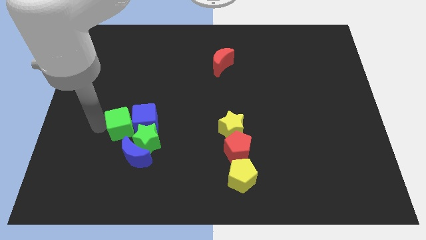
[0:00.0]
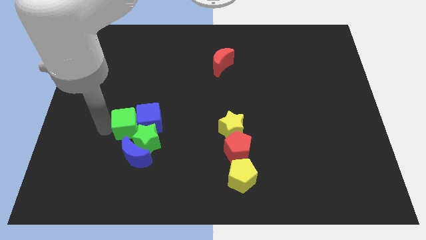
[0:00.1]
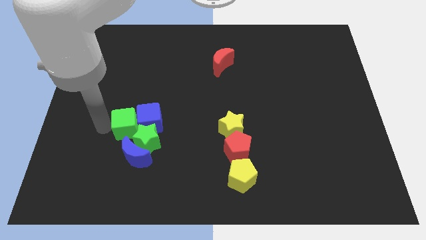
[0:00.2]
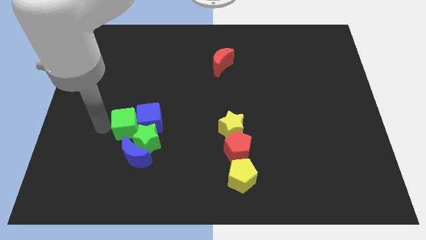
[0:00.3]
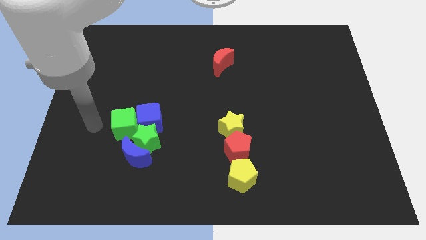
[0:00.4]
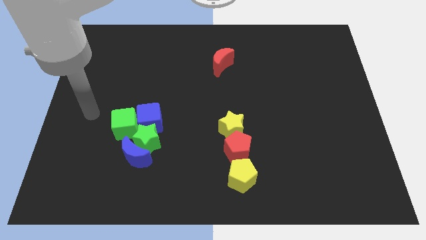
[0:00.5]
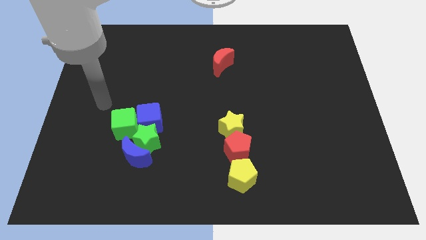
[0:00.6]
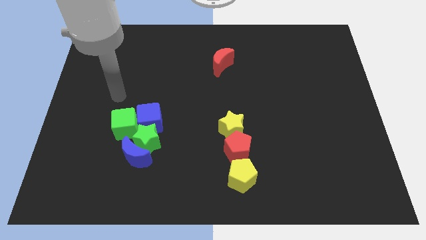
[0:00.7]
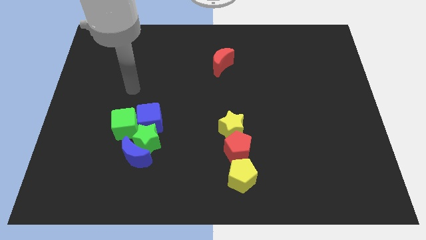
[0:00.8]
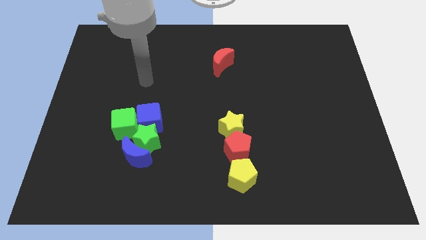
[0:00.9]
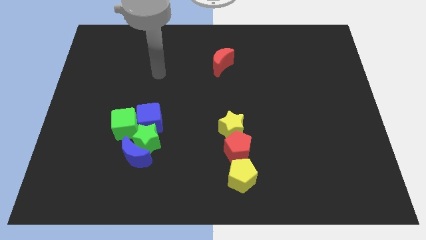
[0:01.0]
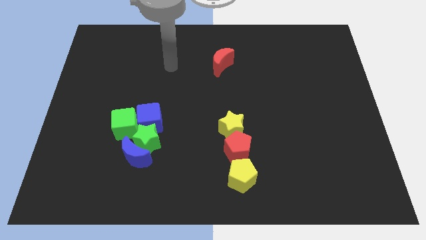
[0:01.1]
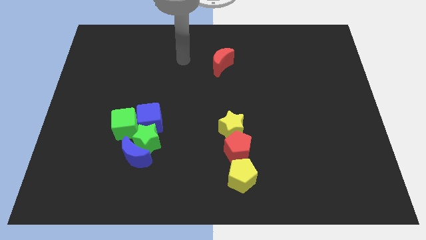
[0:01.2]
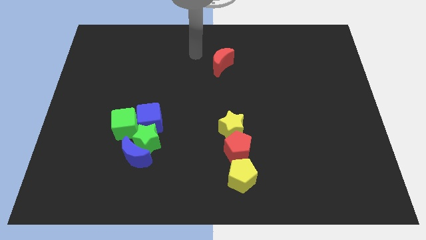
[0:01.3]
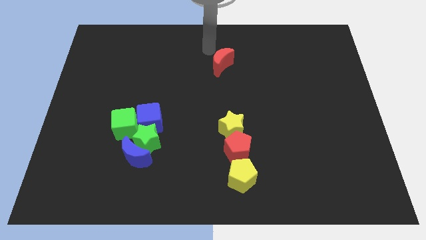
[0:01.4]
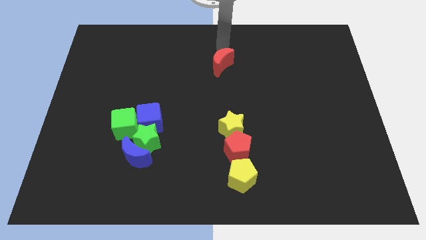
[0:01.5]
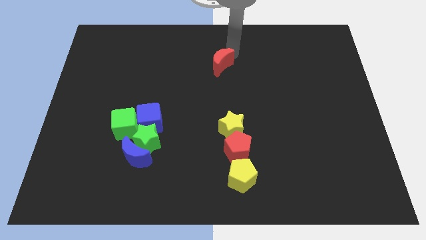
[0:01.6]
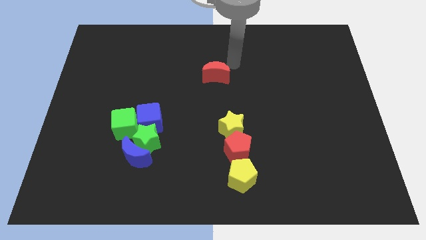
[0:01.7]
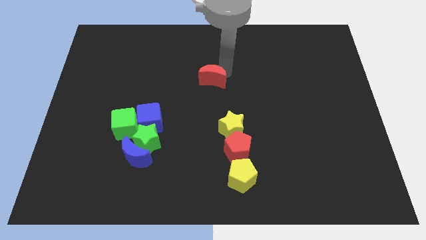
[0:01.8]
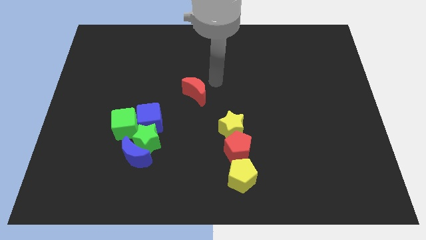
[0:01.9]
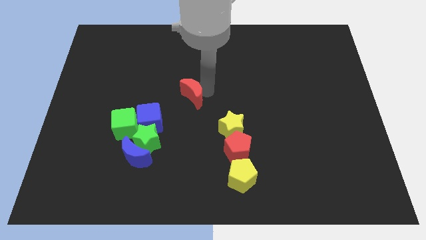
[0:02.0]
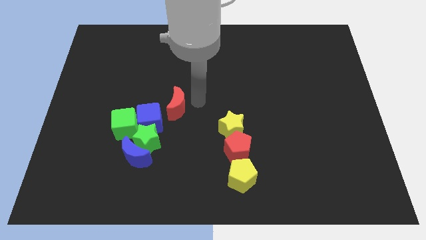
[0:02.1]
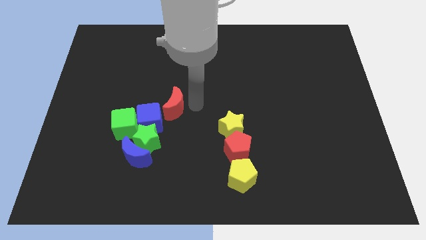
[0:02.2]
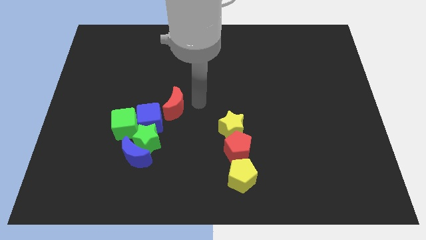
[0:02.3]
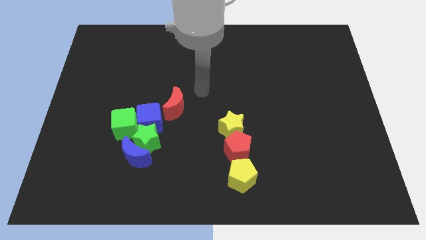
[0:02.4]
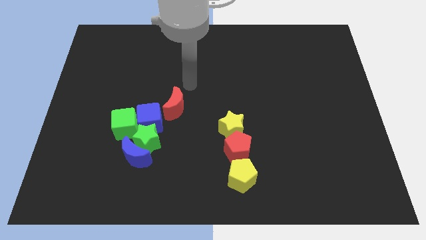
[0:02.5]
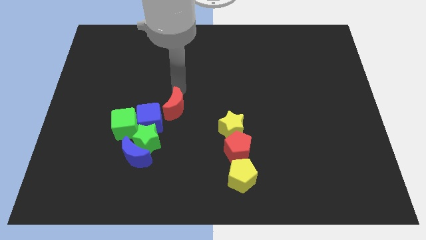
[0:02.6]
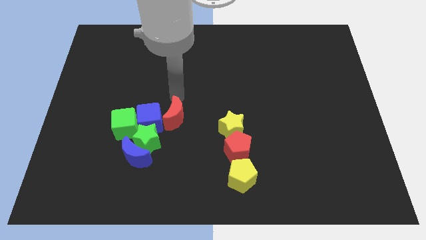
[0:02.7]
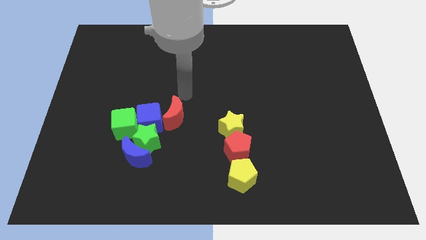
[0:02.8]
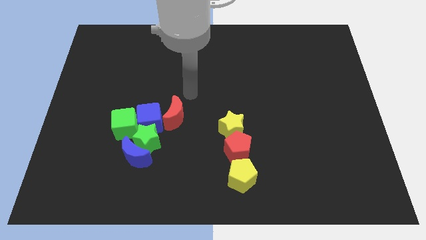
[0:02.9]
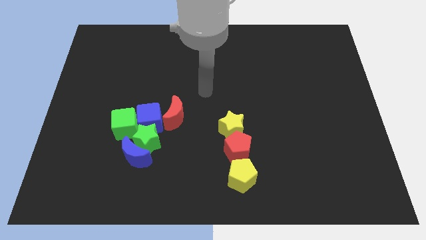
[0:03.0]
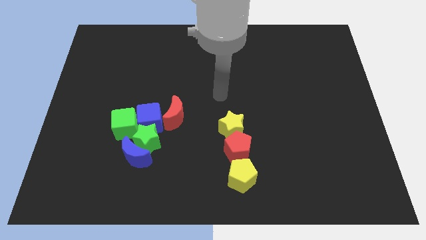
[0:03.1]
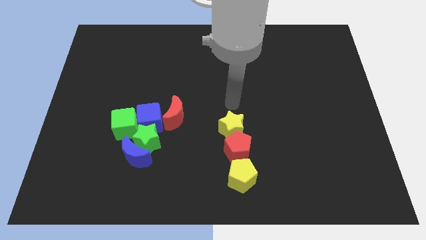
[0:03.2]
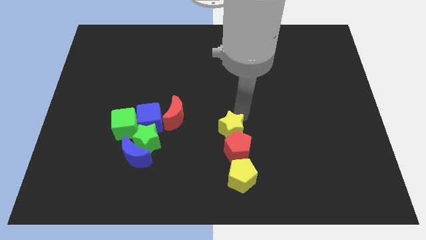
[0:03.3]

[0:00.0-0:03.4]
move the red crescent right to the blue cube

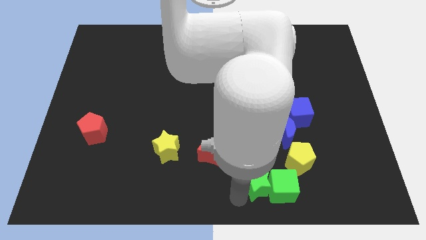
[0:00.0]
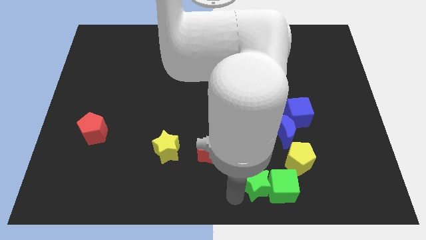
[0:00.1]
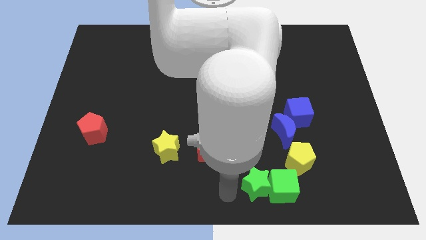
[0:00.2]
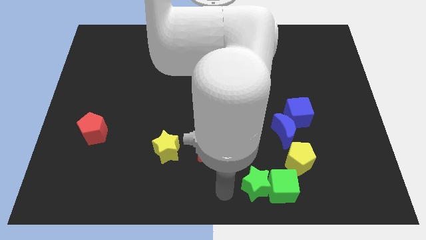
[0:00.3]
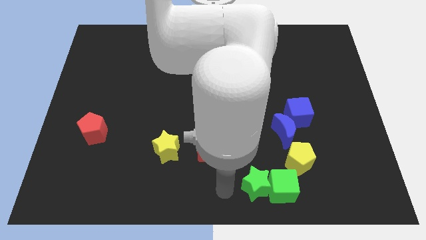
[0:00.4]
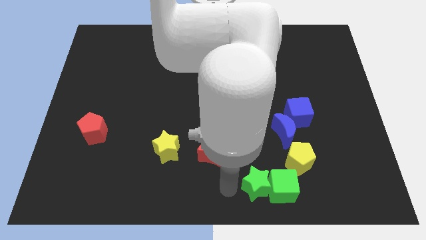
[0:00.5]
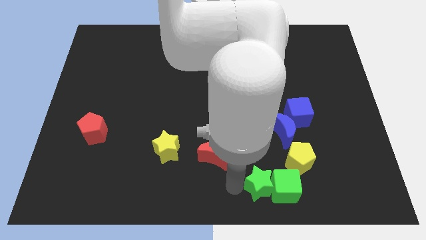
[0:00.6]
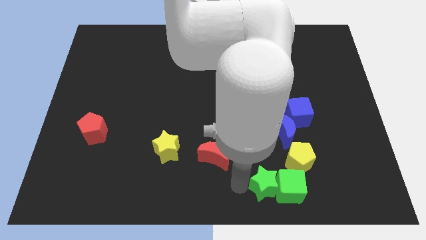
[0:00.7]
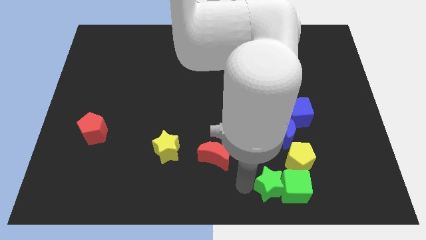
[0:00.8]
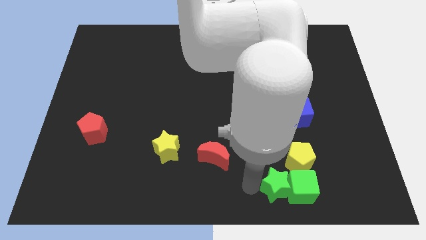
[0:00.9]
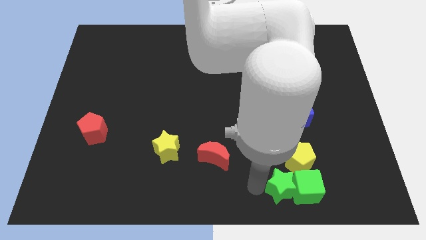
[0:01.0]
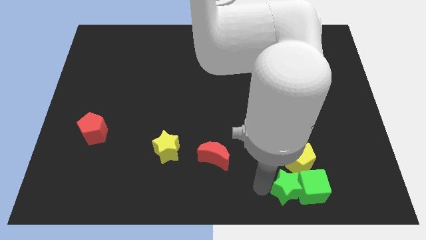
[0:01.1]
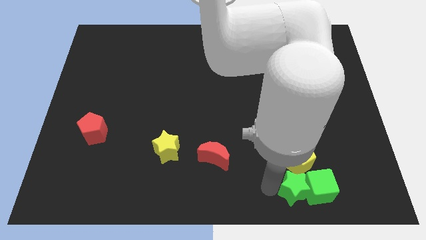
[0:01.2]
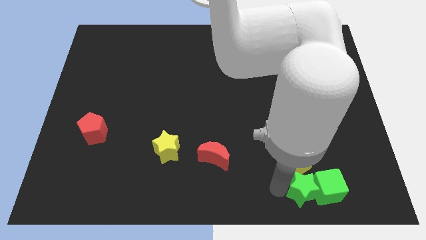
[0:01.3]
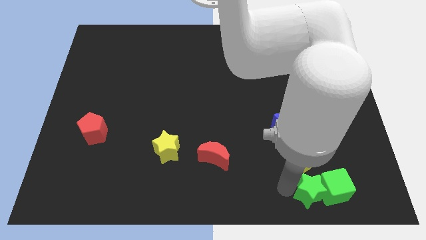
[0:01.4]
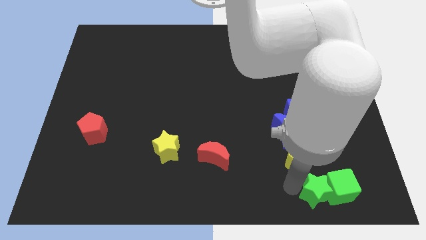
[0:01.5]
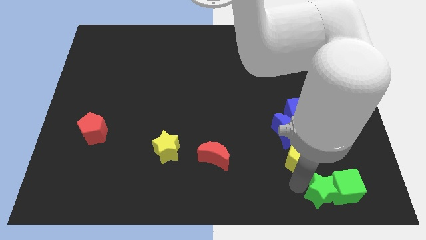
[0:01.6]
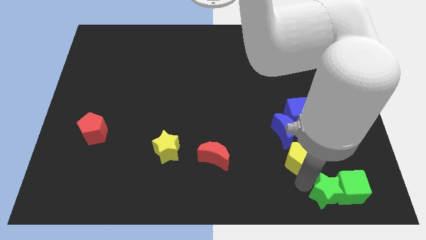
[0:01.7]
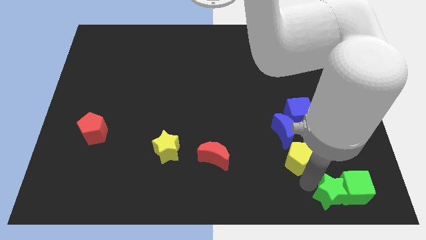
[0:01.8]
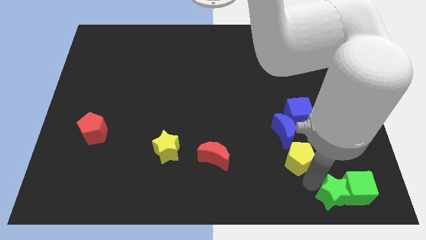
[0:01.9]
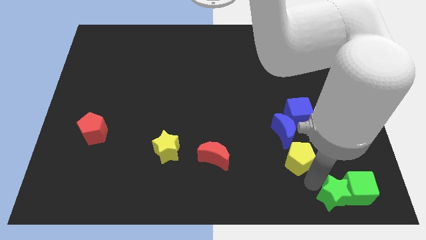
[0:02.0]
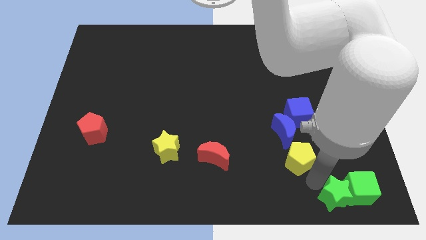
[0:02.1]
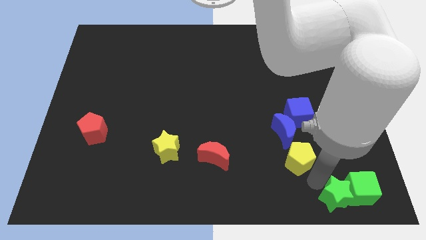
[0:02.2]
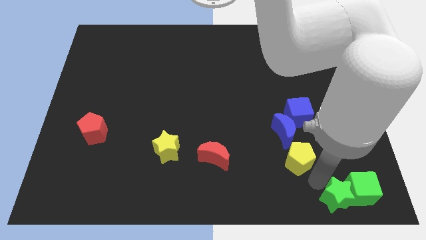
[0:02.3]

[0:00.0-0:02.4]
push the green cube along with green star to the bottom right of the board

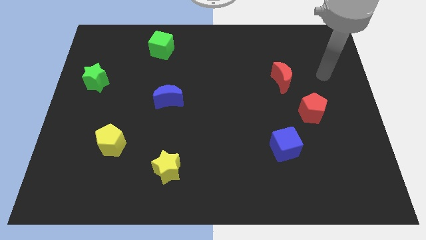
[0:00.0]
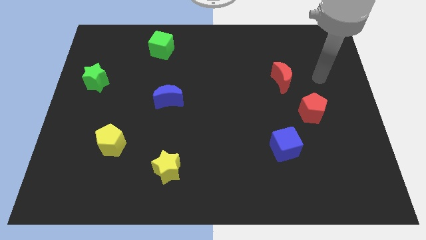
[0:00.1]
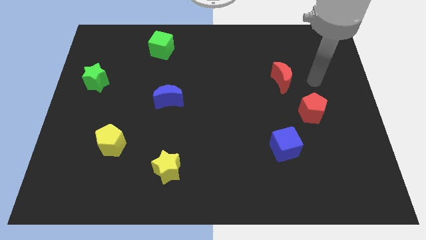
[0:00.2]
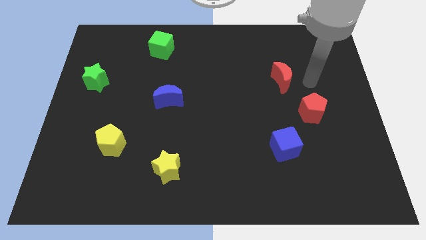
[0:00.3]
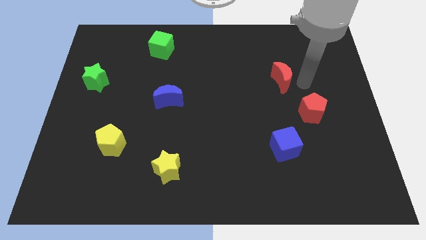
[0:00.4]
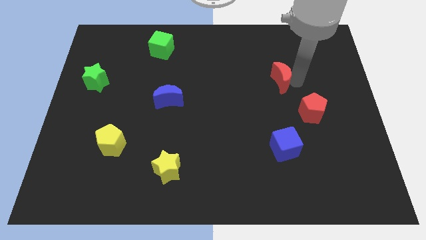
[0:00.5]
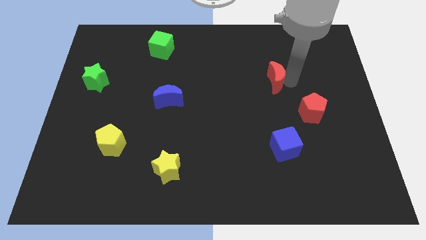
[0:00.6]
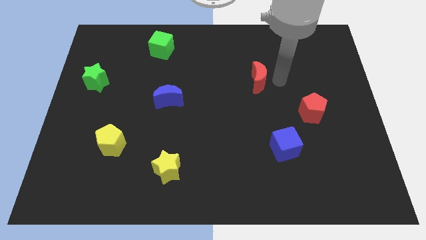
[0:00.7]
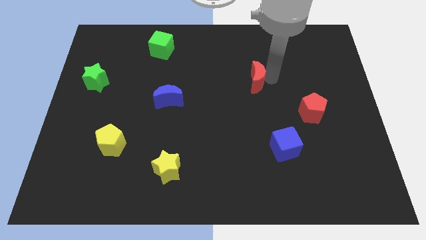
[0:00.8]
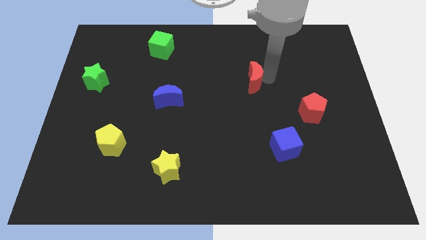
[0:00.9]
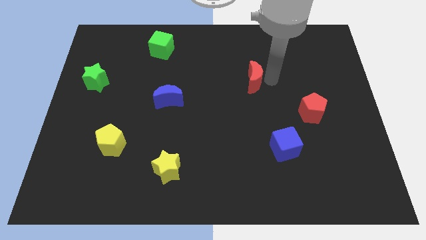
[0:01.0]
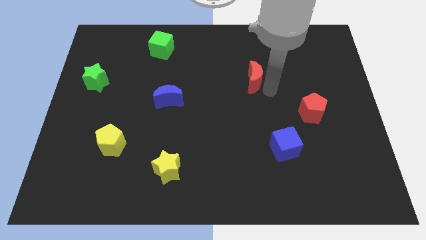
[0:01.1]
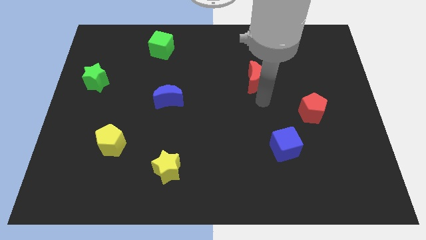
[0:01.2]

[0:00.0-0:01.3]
move the red moon slightly to the left

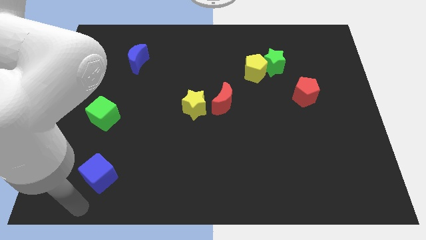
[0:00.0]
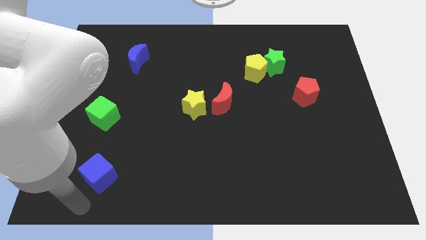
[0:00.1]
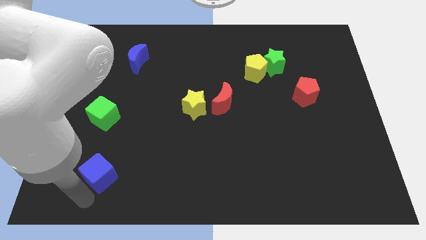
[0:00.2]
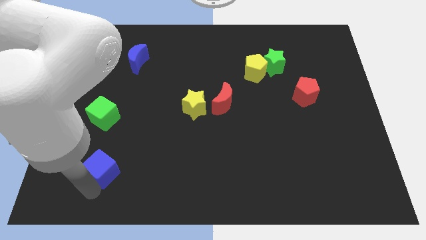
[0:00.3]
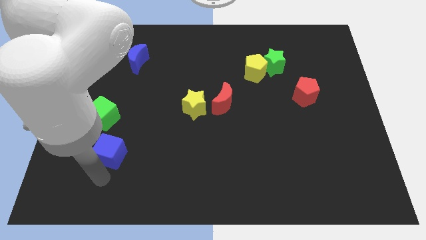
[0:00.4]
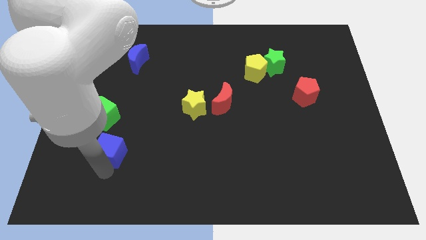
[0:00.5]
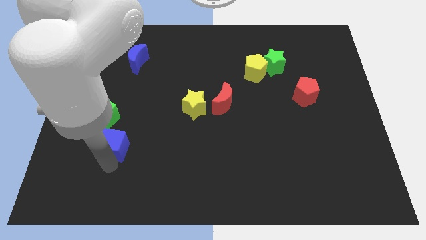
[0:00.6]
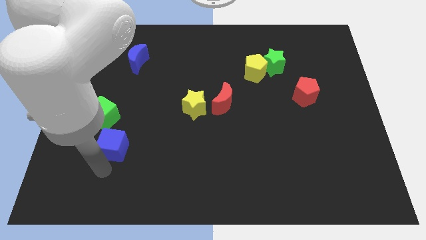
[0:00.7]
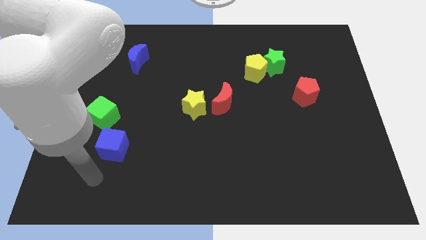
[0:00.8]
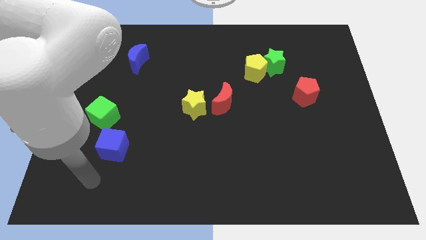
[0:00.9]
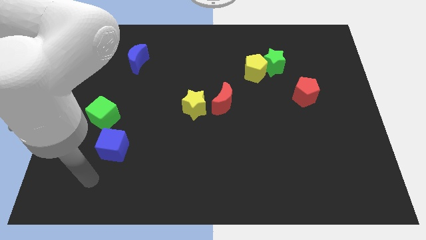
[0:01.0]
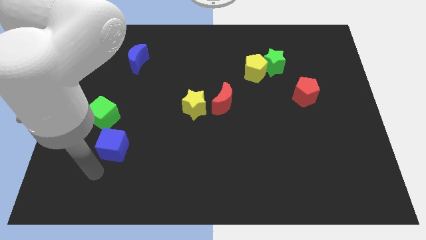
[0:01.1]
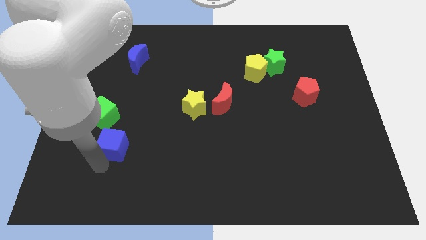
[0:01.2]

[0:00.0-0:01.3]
move the blue cube below the green cube

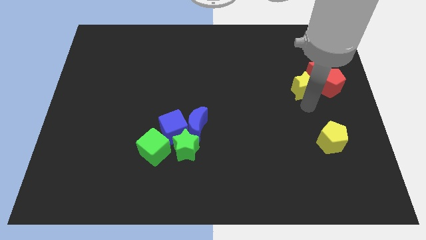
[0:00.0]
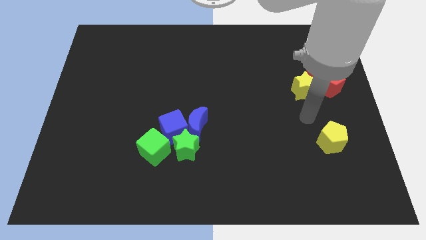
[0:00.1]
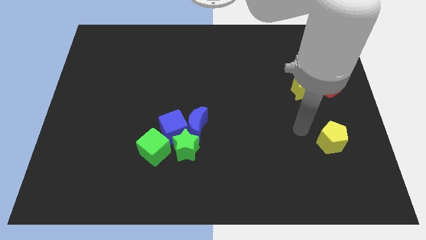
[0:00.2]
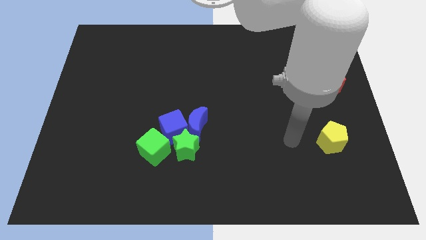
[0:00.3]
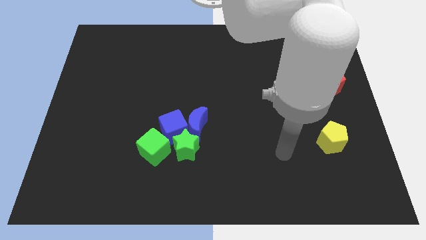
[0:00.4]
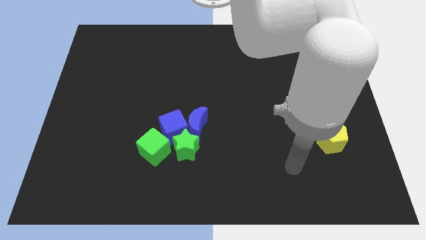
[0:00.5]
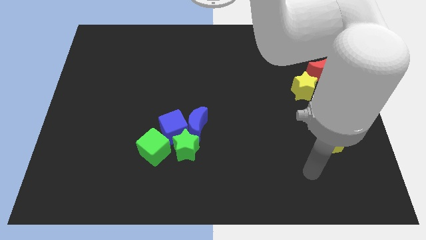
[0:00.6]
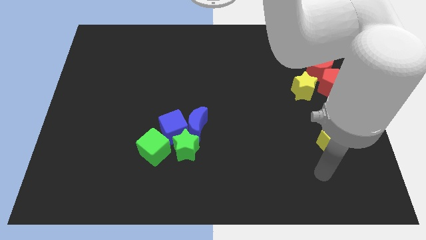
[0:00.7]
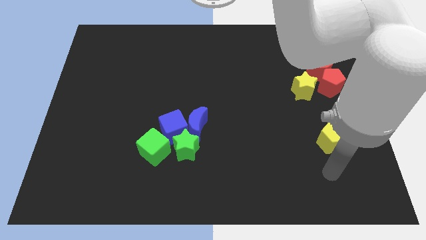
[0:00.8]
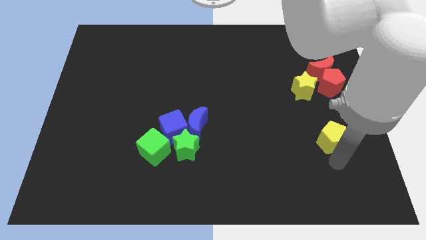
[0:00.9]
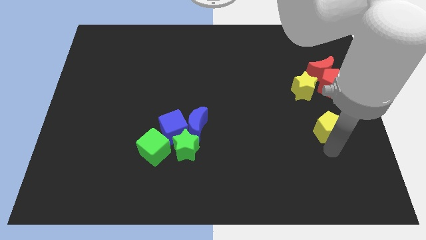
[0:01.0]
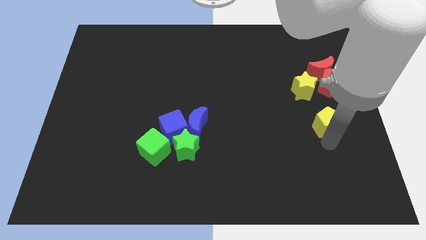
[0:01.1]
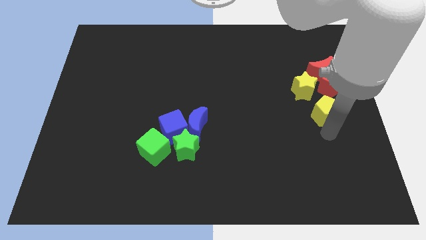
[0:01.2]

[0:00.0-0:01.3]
move the yellow pentagon upward
